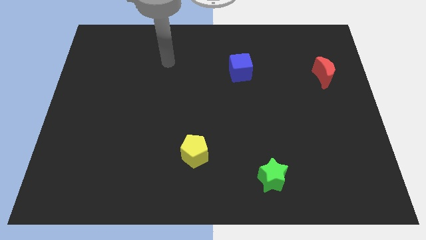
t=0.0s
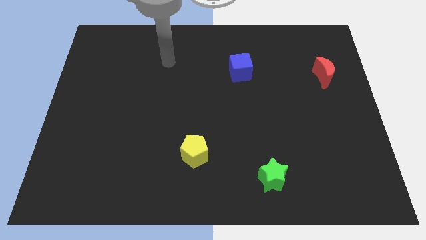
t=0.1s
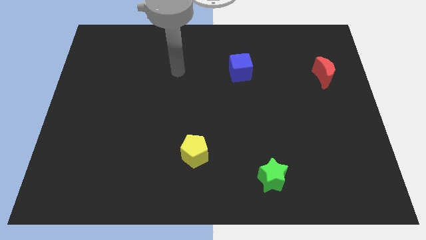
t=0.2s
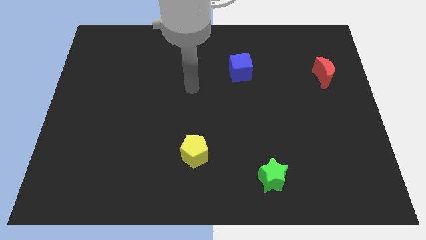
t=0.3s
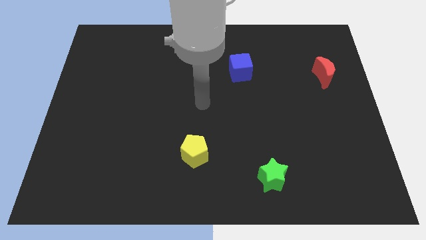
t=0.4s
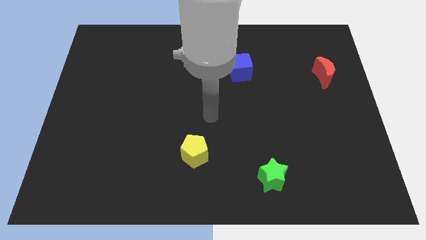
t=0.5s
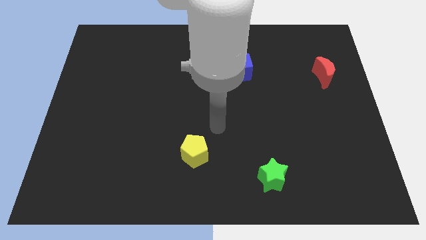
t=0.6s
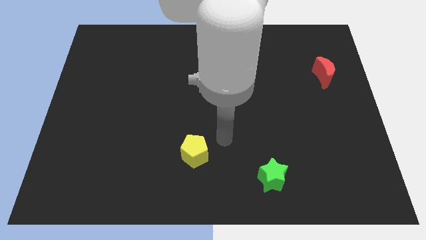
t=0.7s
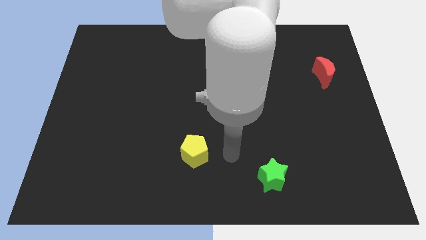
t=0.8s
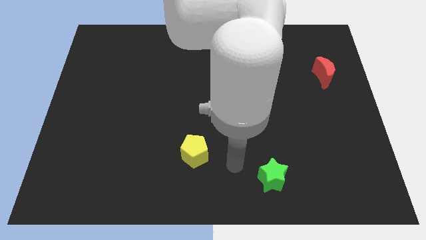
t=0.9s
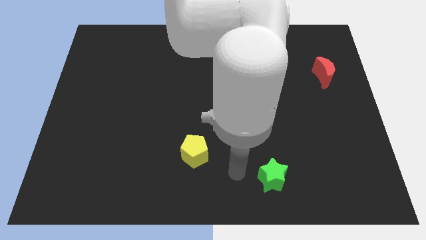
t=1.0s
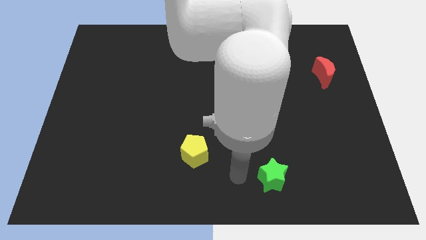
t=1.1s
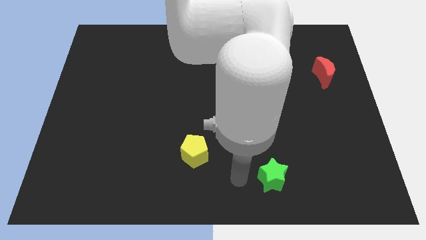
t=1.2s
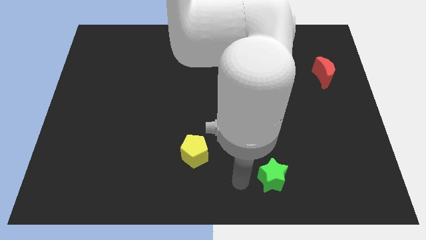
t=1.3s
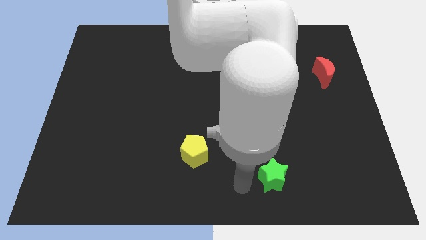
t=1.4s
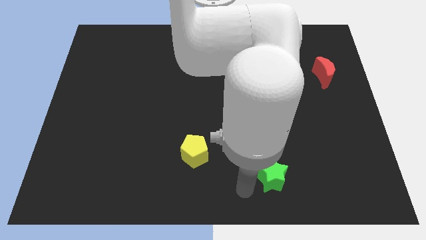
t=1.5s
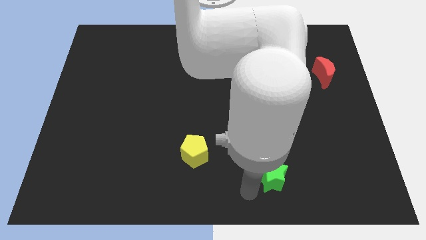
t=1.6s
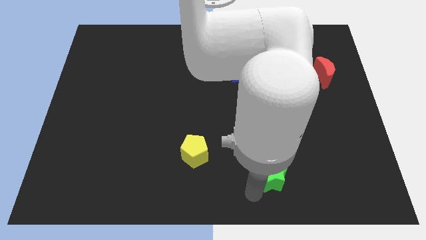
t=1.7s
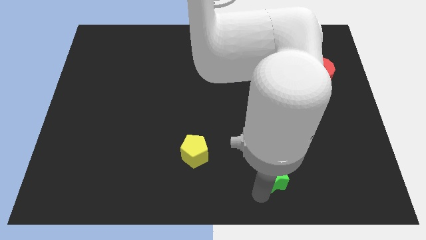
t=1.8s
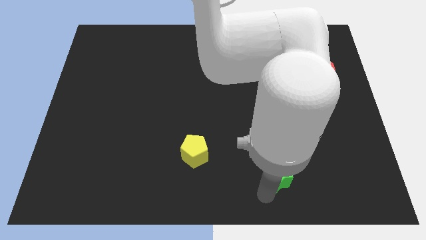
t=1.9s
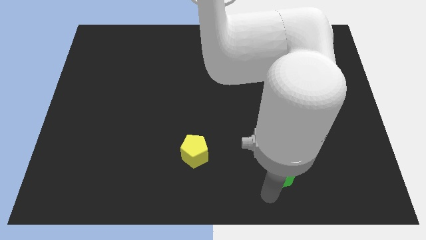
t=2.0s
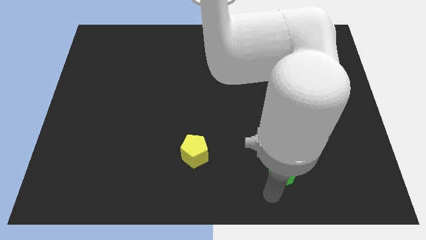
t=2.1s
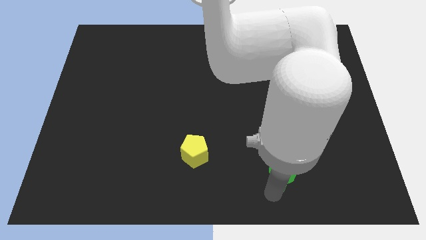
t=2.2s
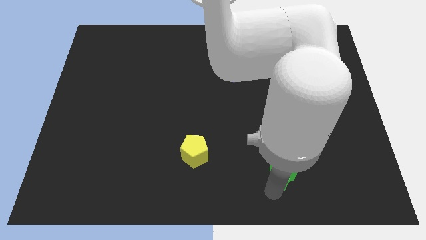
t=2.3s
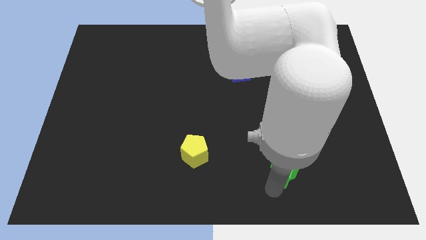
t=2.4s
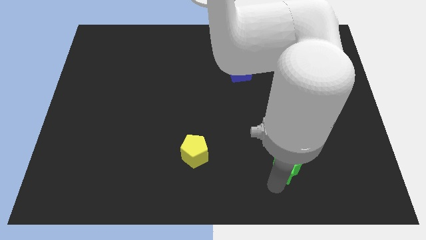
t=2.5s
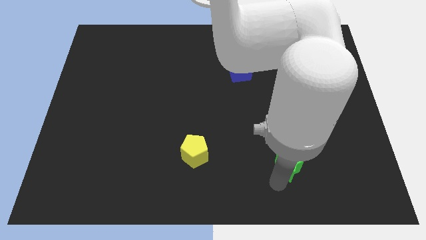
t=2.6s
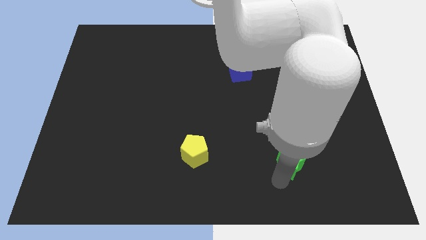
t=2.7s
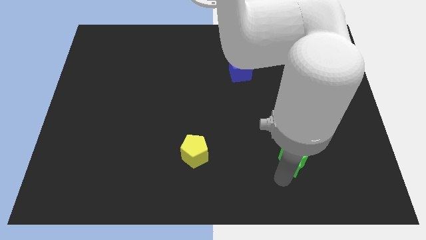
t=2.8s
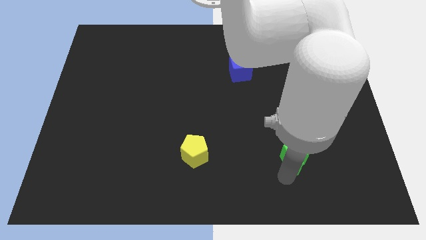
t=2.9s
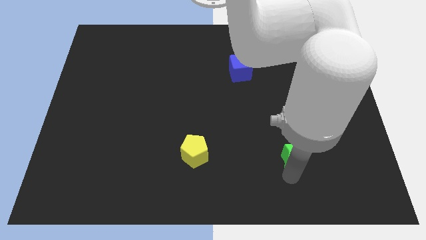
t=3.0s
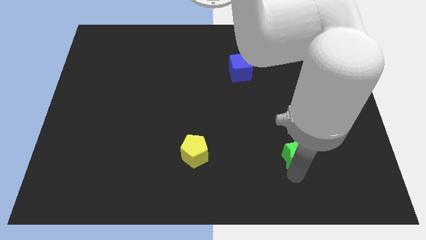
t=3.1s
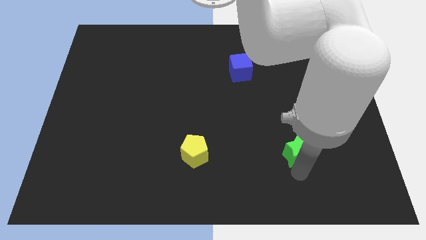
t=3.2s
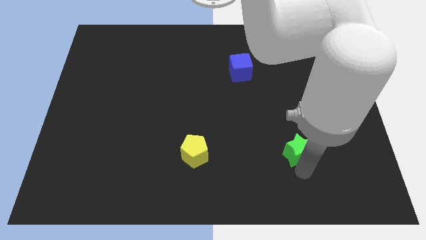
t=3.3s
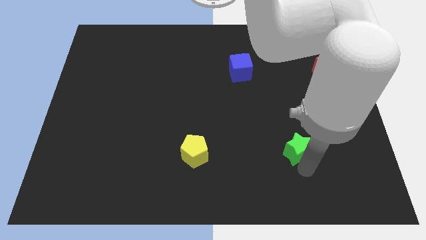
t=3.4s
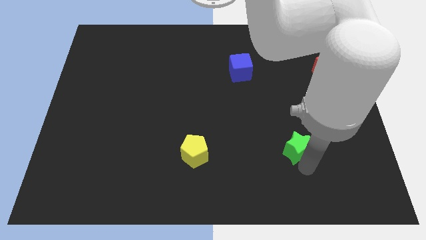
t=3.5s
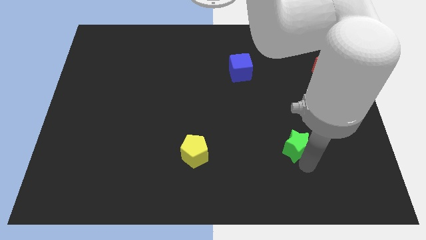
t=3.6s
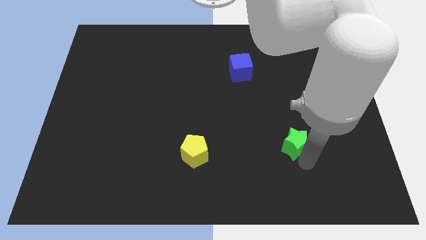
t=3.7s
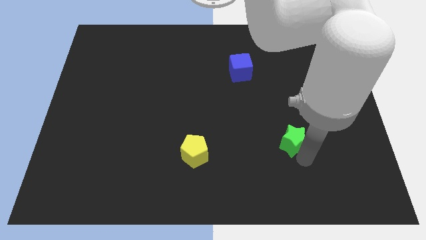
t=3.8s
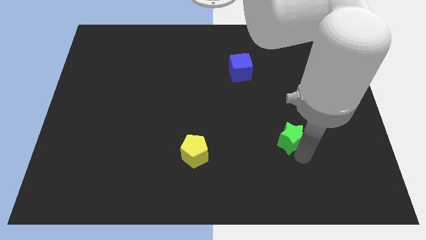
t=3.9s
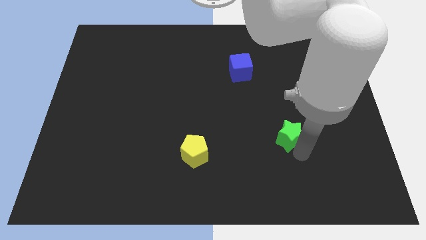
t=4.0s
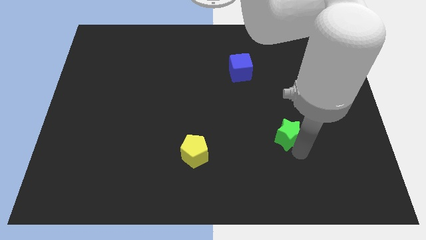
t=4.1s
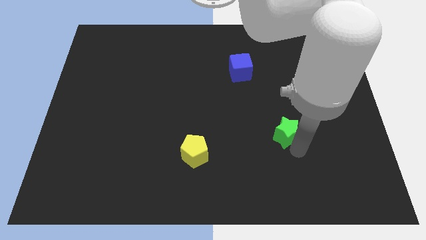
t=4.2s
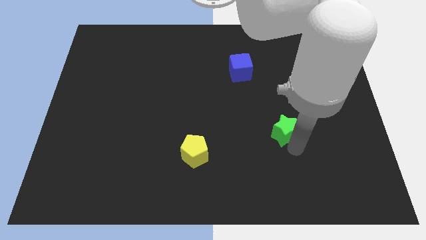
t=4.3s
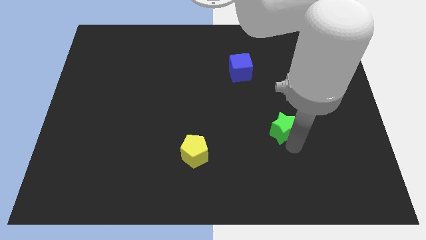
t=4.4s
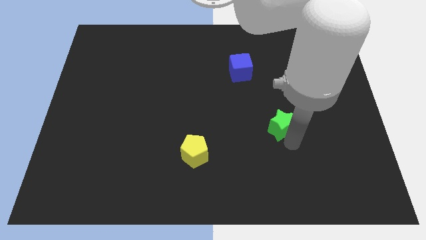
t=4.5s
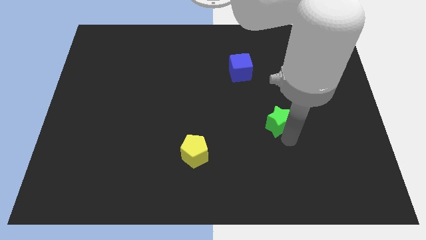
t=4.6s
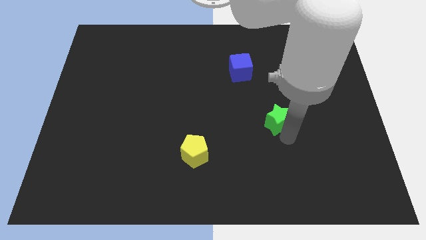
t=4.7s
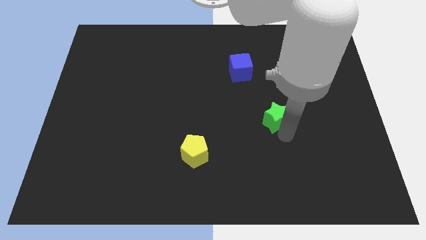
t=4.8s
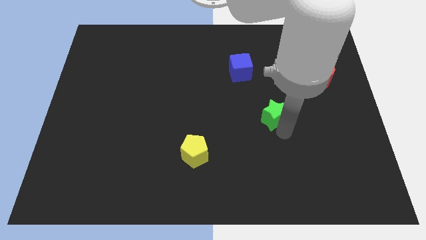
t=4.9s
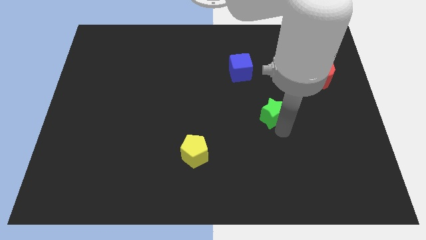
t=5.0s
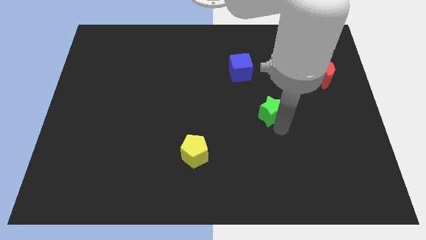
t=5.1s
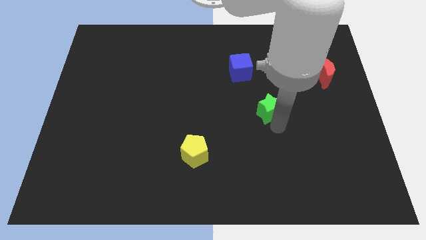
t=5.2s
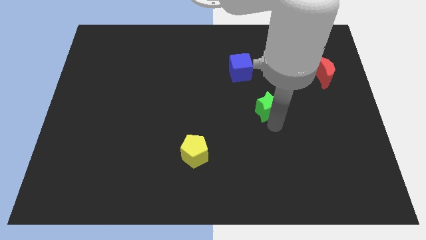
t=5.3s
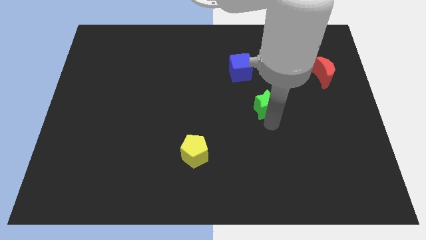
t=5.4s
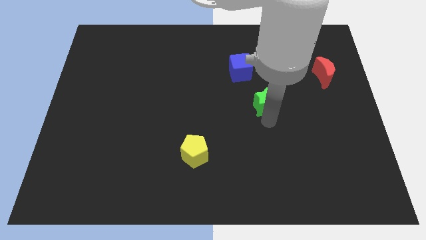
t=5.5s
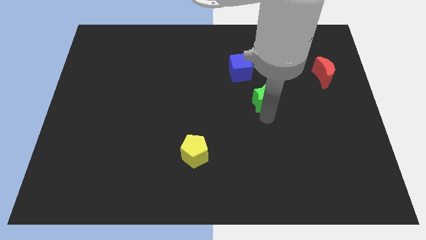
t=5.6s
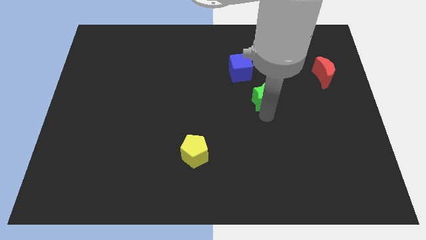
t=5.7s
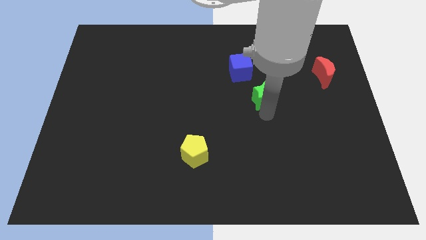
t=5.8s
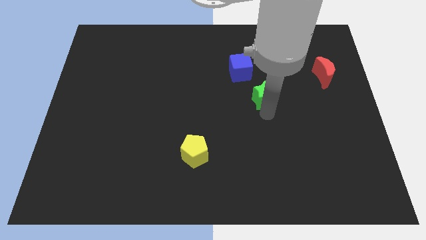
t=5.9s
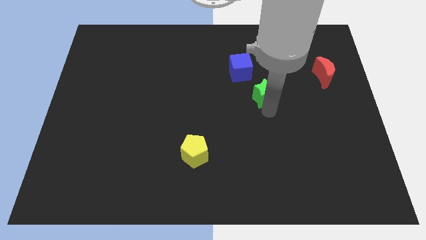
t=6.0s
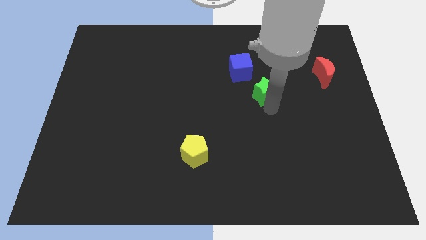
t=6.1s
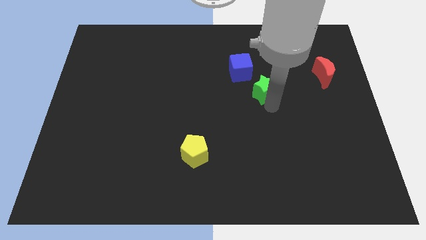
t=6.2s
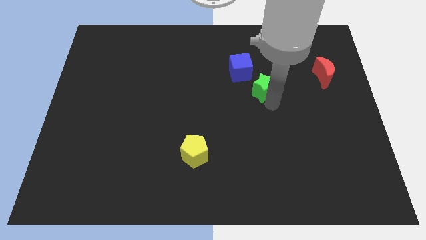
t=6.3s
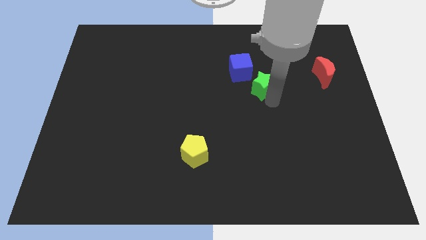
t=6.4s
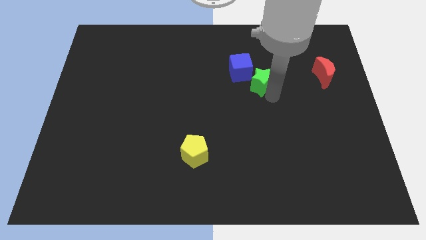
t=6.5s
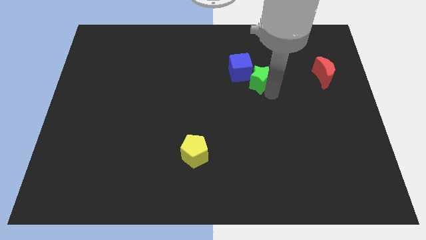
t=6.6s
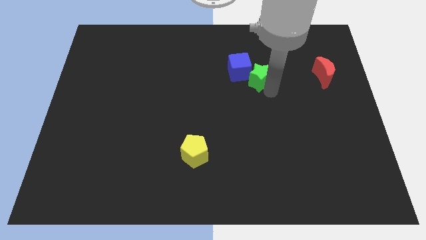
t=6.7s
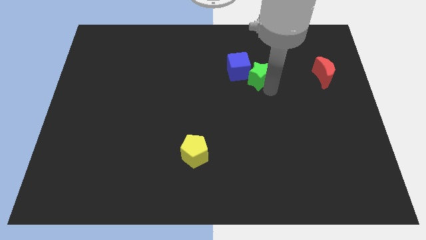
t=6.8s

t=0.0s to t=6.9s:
put the star close to the cube

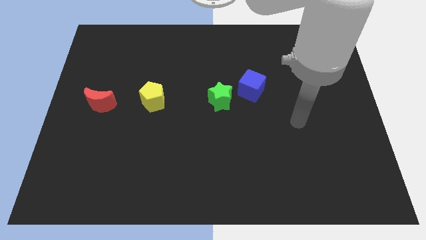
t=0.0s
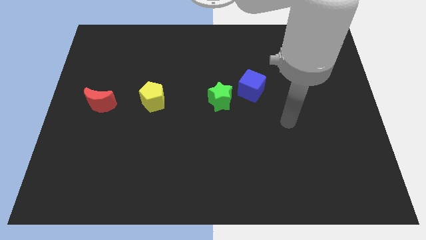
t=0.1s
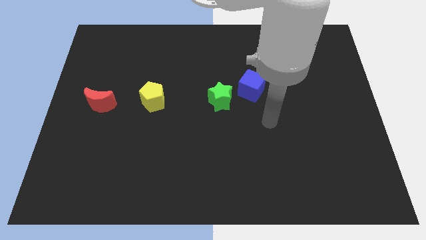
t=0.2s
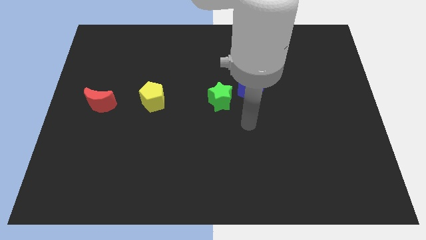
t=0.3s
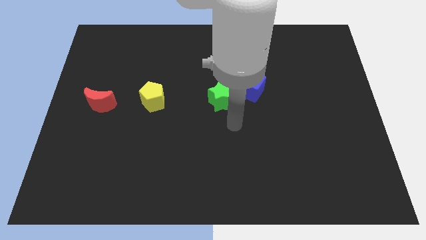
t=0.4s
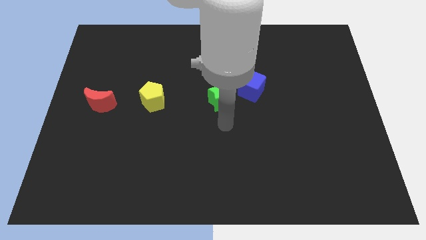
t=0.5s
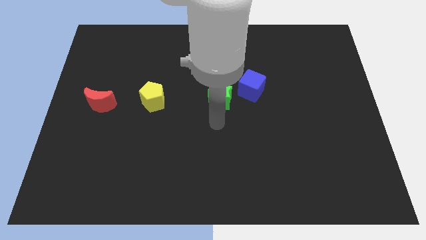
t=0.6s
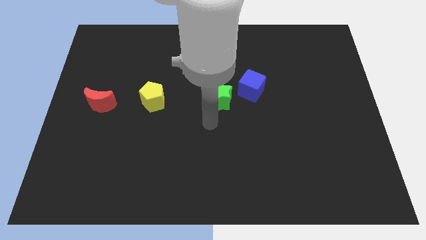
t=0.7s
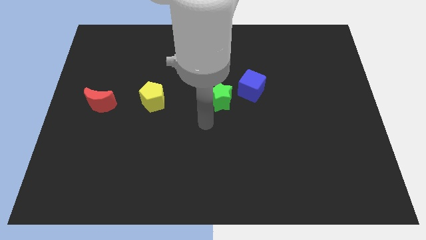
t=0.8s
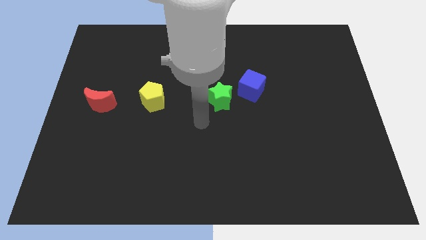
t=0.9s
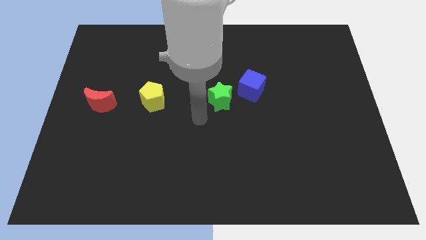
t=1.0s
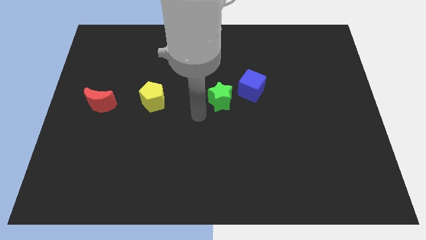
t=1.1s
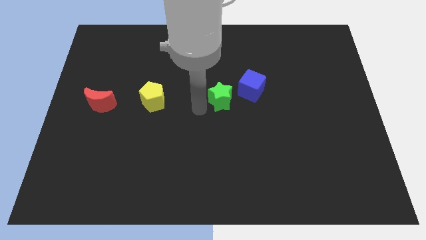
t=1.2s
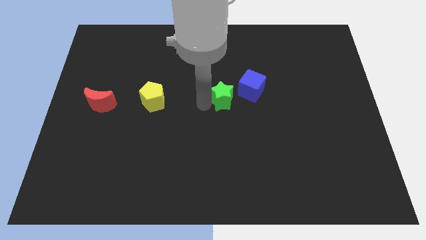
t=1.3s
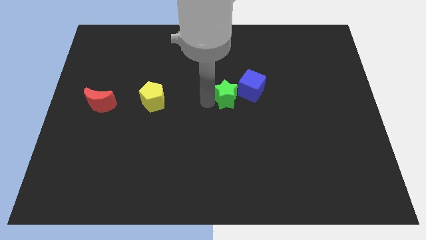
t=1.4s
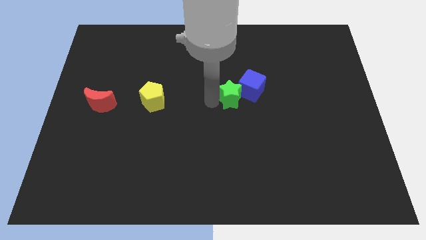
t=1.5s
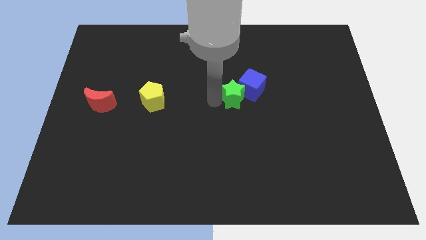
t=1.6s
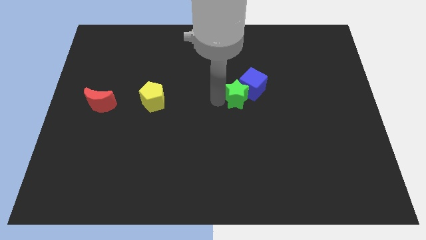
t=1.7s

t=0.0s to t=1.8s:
put the green star next to the blue cube
